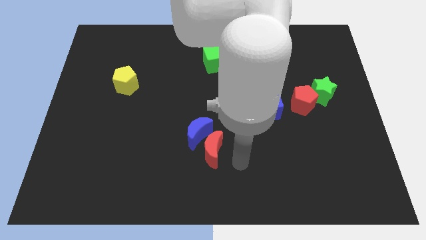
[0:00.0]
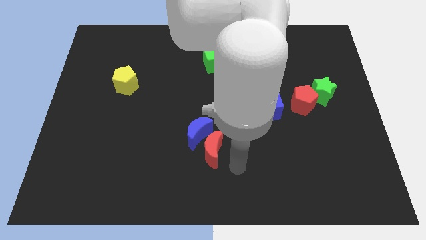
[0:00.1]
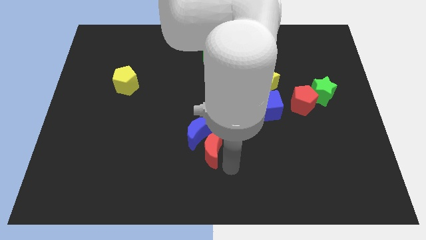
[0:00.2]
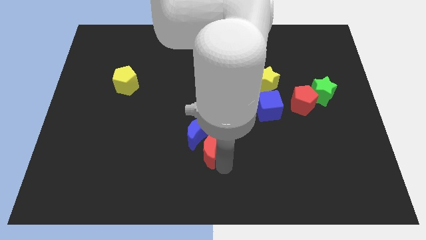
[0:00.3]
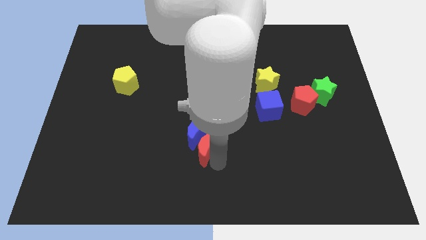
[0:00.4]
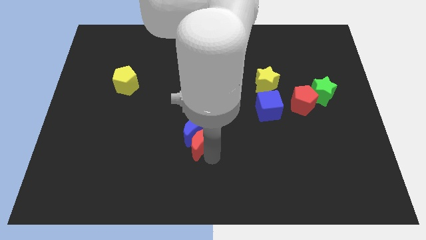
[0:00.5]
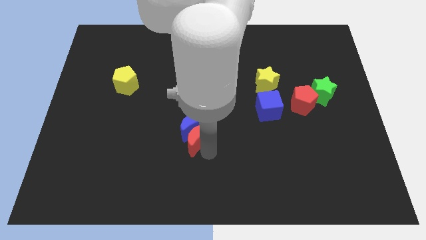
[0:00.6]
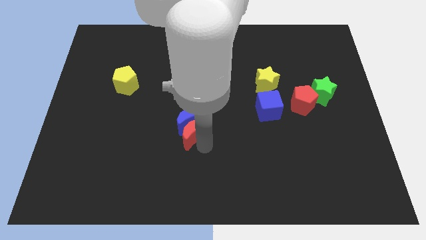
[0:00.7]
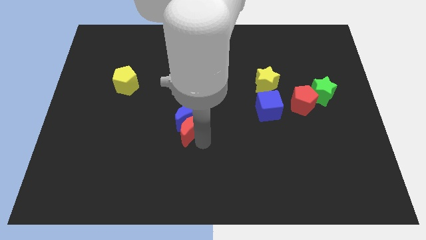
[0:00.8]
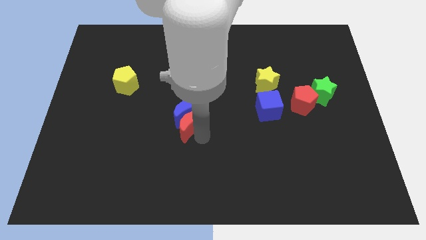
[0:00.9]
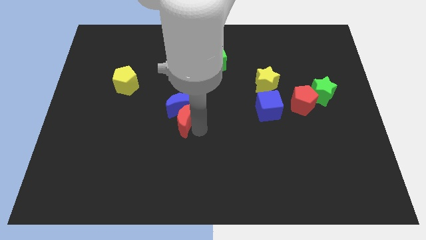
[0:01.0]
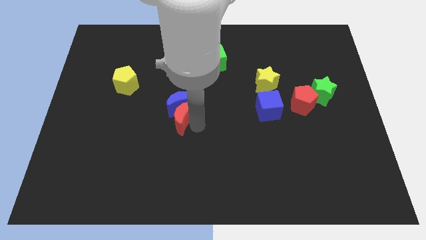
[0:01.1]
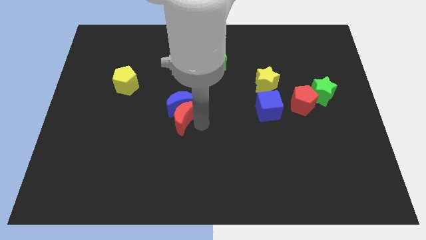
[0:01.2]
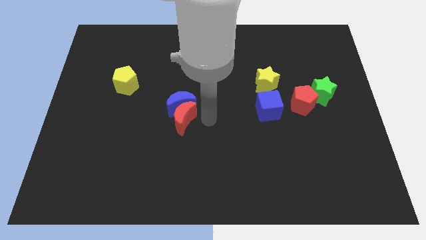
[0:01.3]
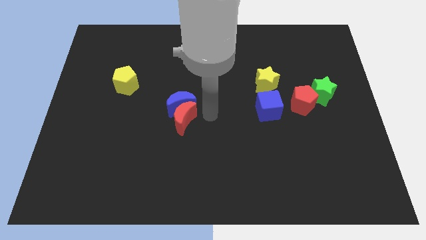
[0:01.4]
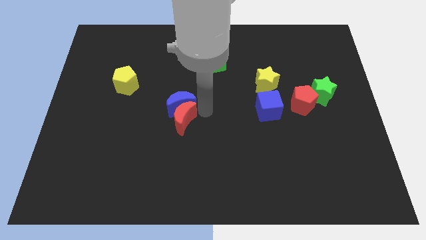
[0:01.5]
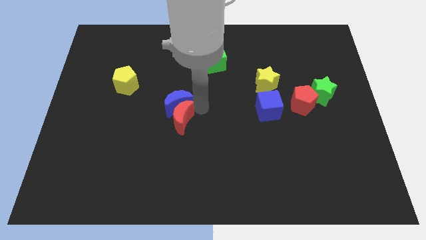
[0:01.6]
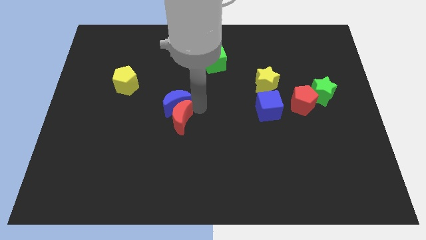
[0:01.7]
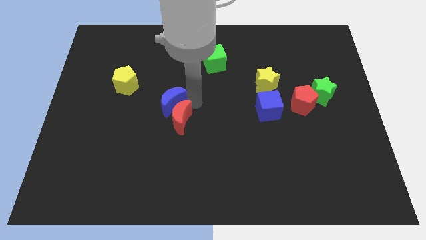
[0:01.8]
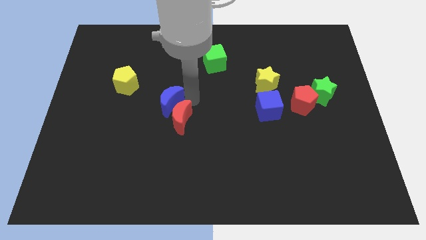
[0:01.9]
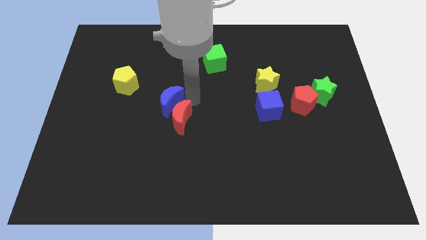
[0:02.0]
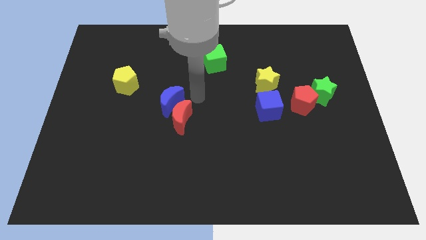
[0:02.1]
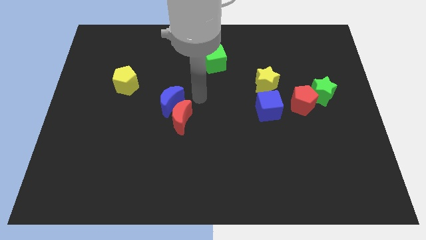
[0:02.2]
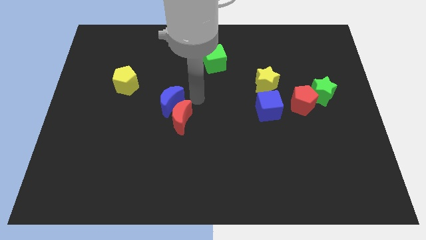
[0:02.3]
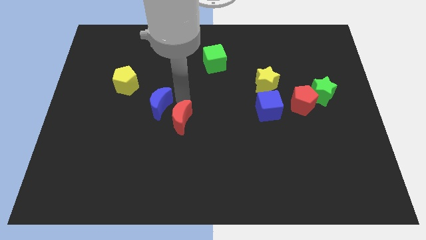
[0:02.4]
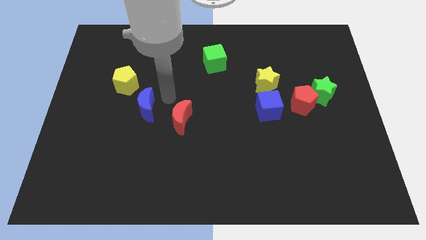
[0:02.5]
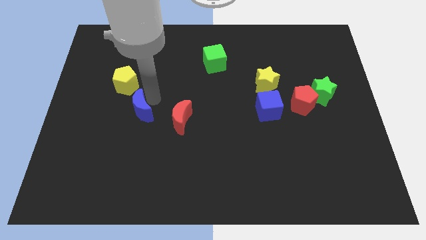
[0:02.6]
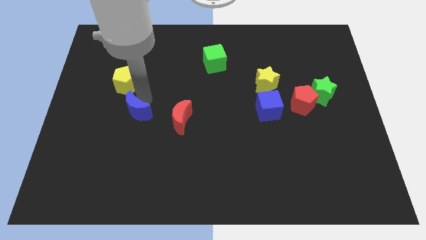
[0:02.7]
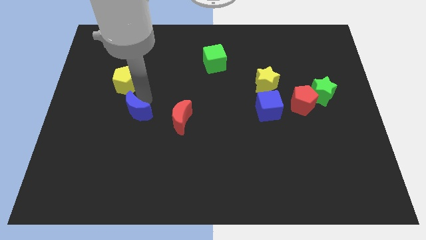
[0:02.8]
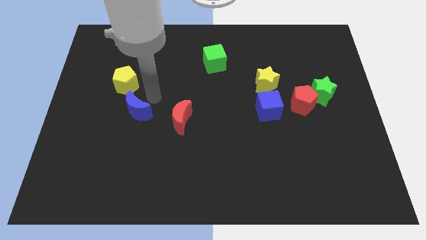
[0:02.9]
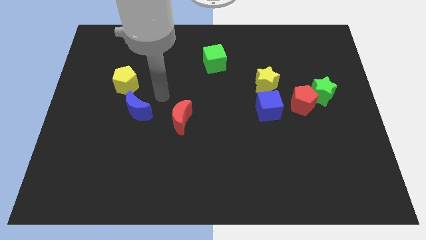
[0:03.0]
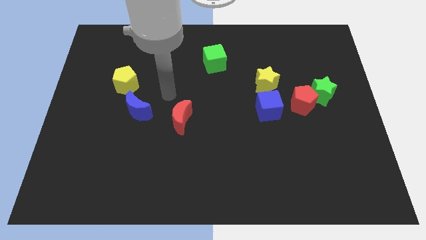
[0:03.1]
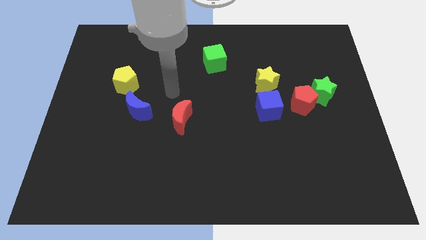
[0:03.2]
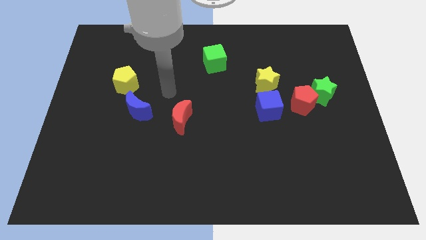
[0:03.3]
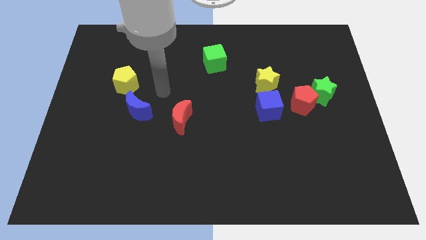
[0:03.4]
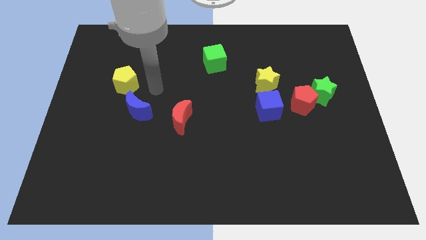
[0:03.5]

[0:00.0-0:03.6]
separate the blue crescent from red crescent

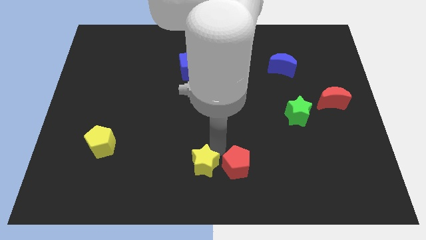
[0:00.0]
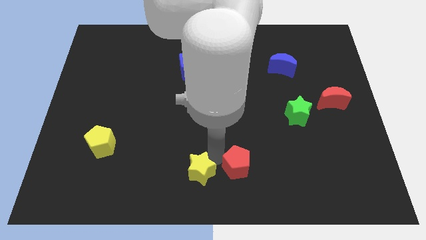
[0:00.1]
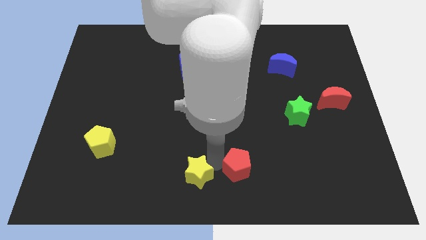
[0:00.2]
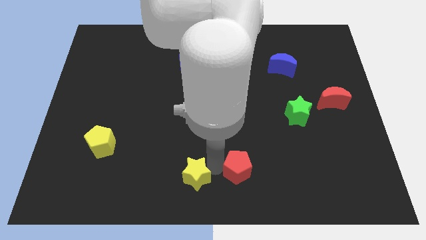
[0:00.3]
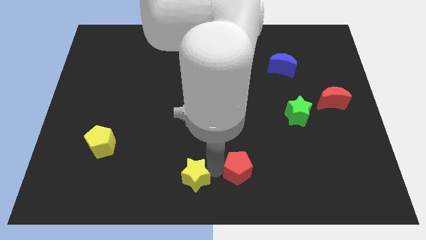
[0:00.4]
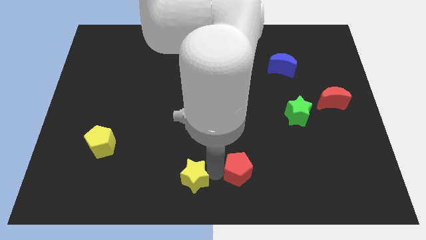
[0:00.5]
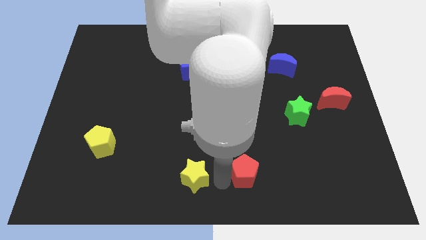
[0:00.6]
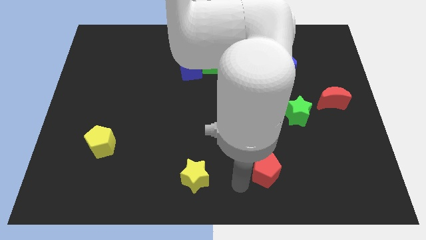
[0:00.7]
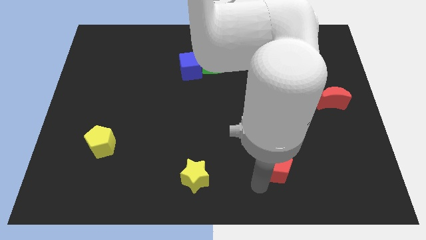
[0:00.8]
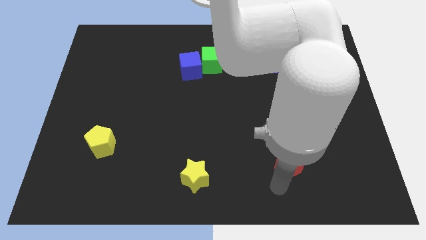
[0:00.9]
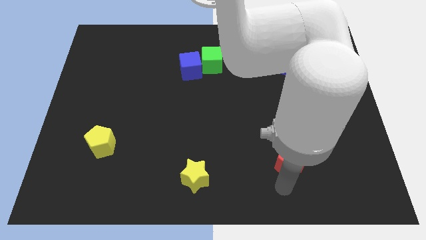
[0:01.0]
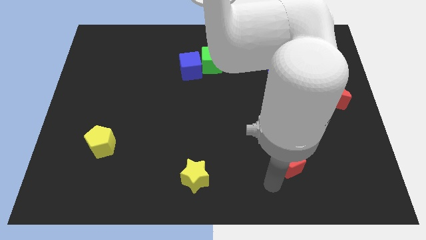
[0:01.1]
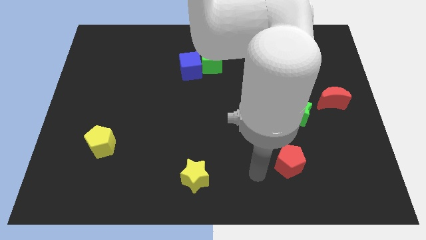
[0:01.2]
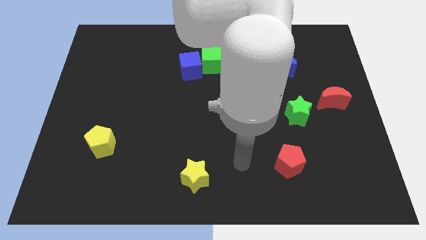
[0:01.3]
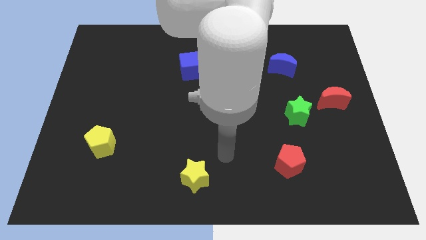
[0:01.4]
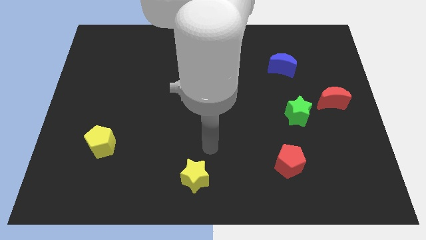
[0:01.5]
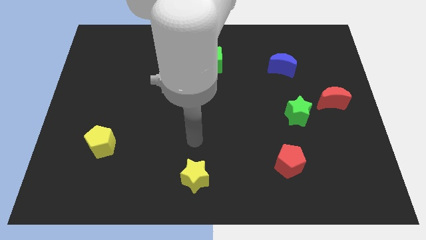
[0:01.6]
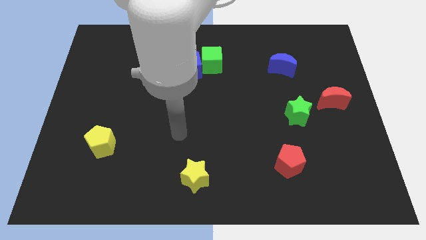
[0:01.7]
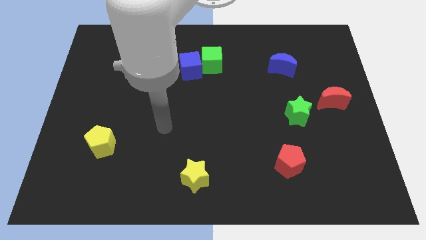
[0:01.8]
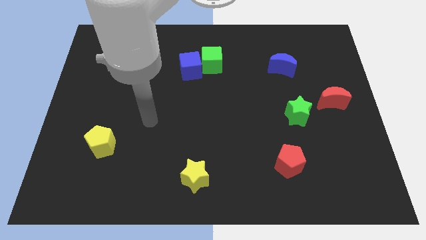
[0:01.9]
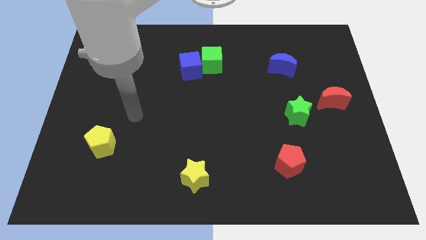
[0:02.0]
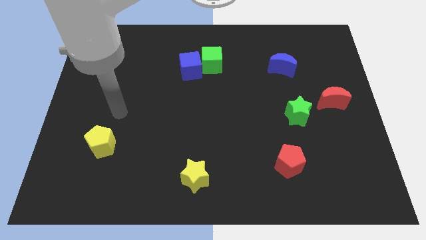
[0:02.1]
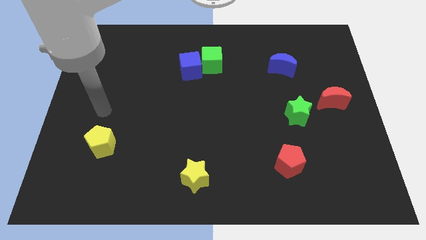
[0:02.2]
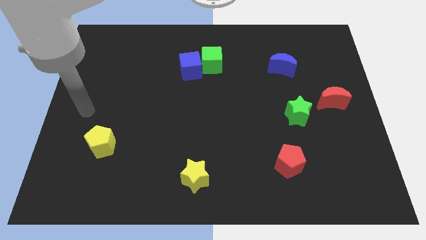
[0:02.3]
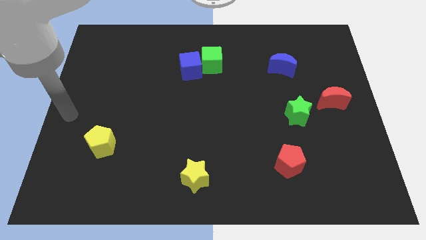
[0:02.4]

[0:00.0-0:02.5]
push the red pentagon towards the right side of the board

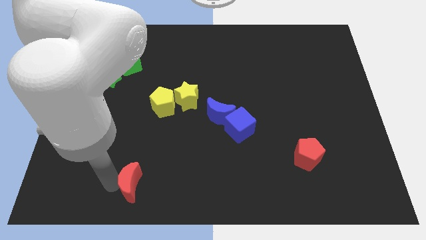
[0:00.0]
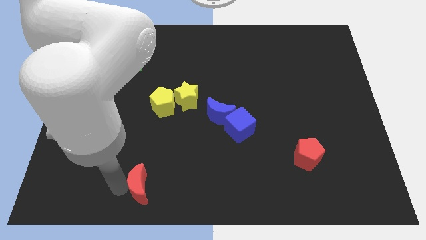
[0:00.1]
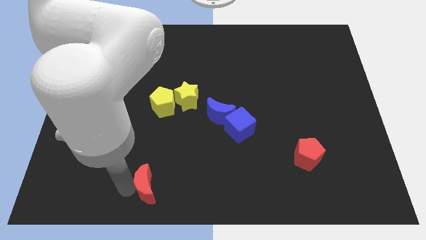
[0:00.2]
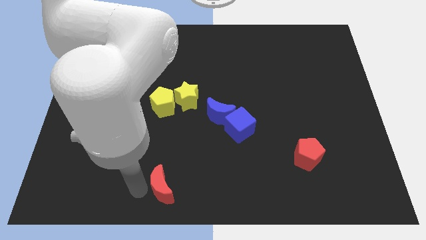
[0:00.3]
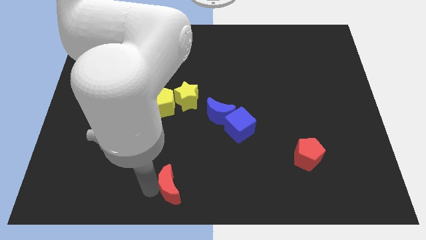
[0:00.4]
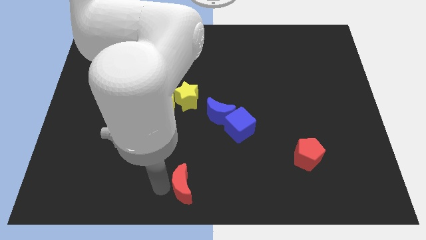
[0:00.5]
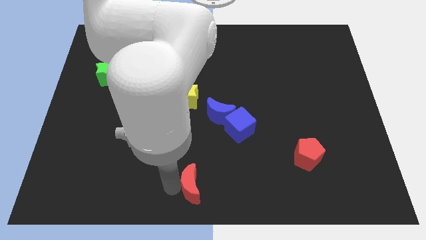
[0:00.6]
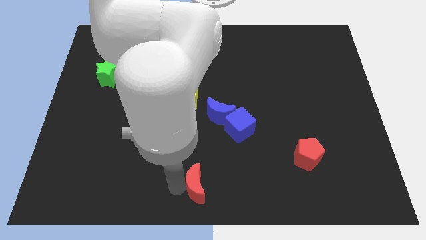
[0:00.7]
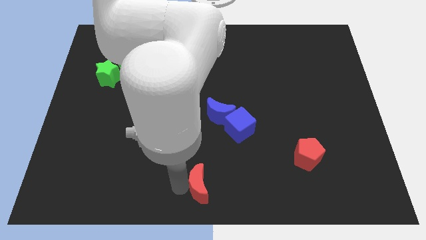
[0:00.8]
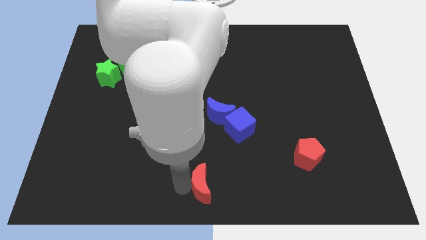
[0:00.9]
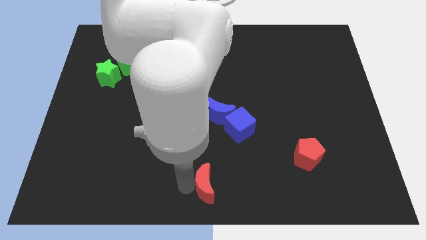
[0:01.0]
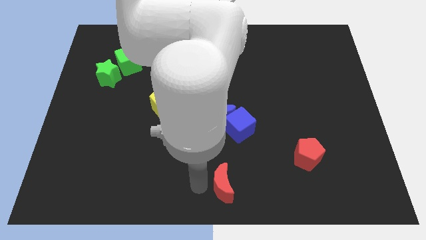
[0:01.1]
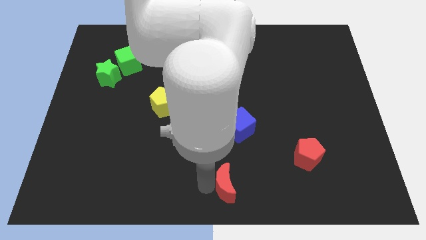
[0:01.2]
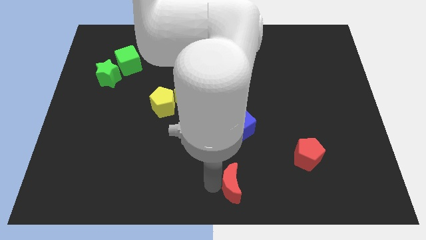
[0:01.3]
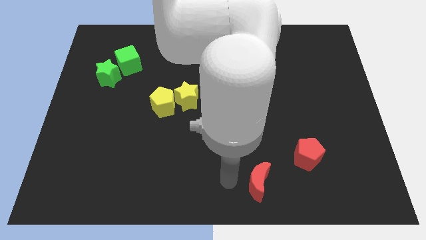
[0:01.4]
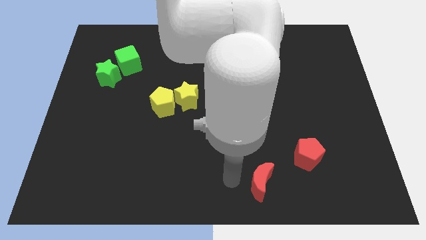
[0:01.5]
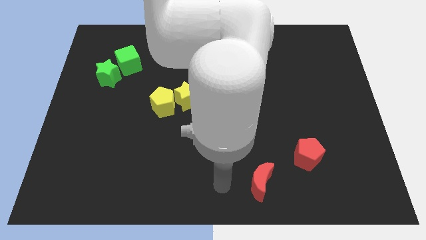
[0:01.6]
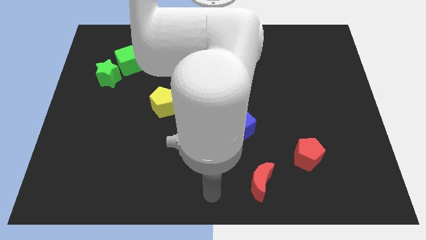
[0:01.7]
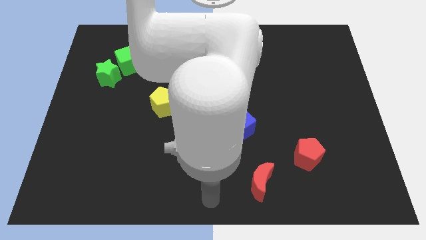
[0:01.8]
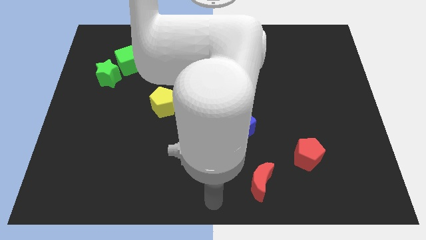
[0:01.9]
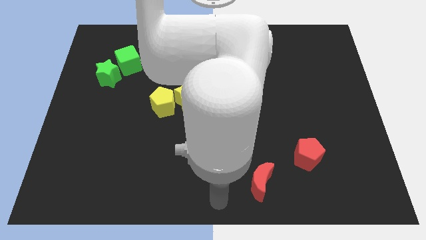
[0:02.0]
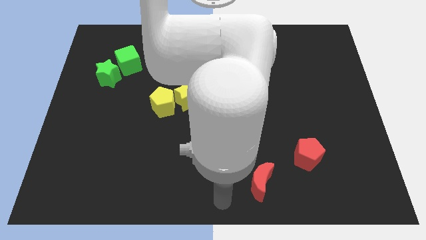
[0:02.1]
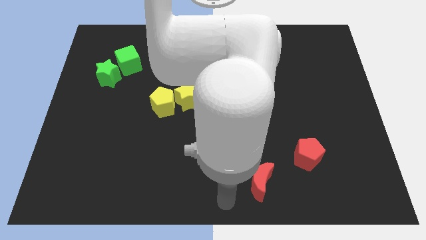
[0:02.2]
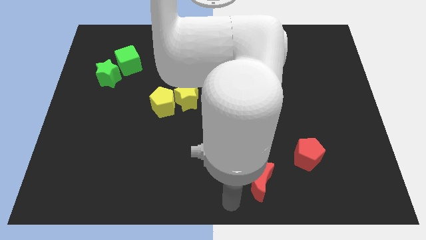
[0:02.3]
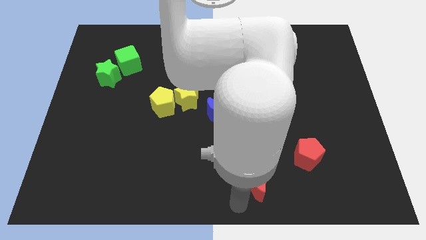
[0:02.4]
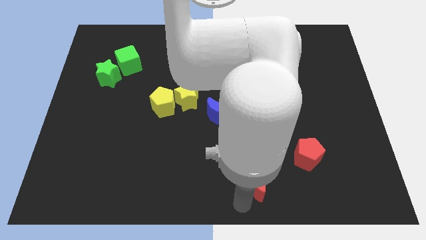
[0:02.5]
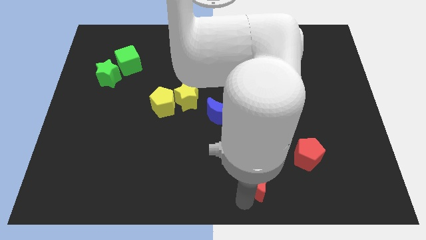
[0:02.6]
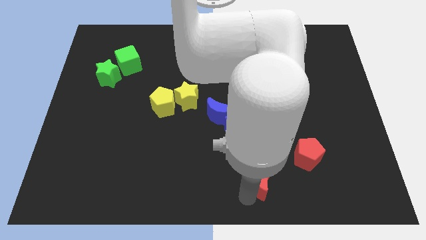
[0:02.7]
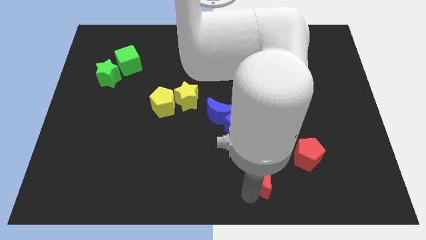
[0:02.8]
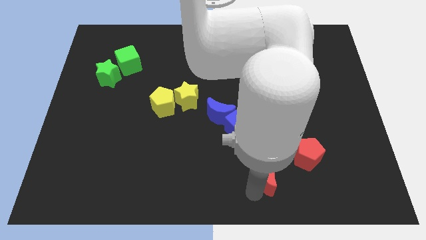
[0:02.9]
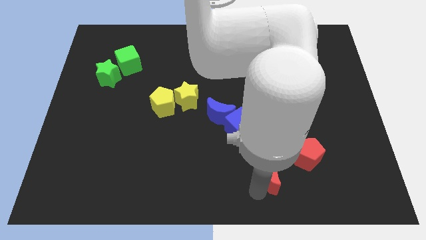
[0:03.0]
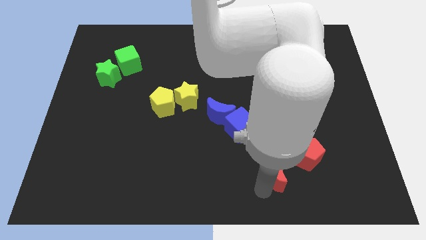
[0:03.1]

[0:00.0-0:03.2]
push red moon towards red pentagon
